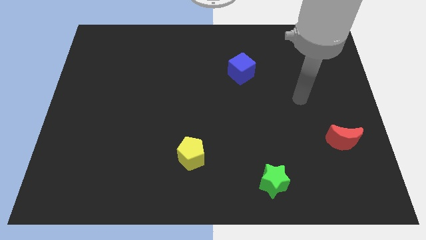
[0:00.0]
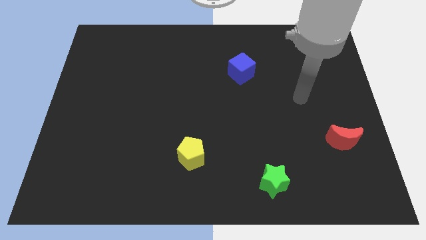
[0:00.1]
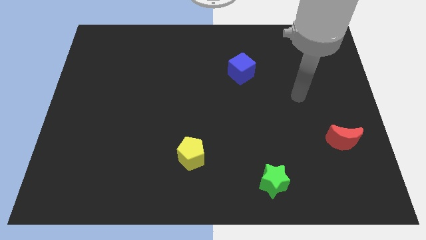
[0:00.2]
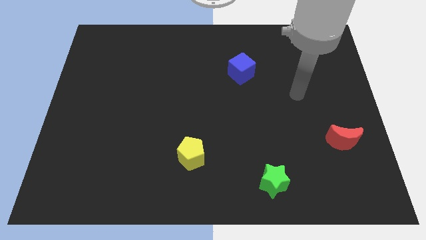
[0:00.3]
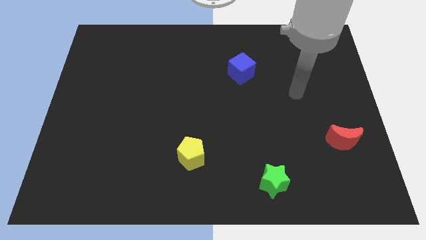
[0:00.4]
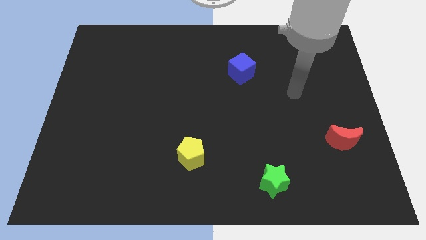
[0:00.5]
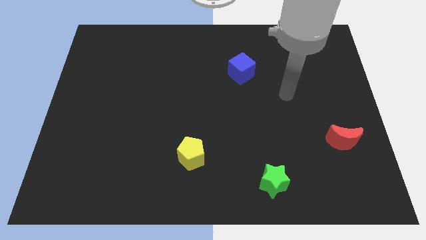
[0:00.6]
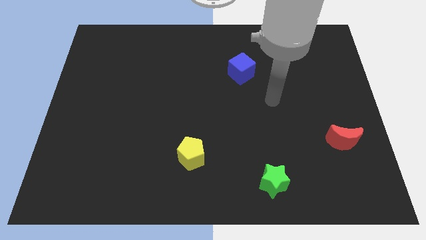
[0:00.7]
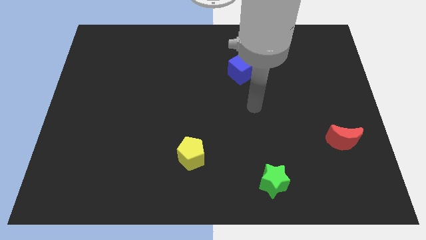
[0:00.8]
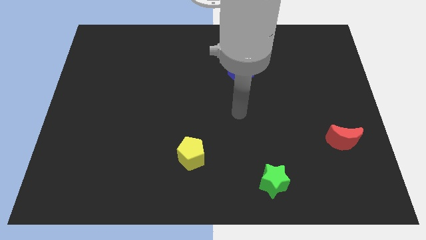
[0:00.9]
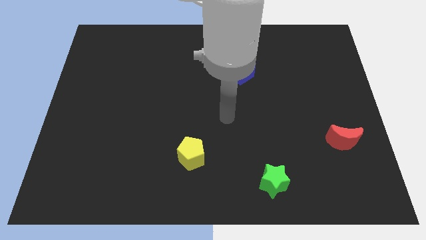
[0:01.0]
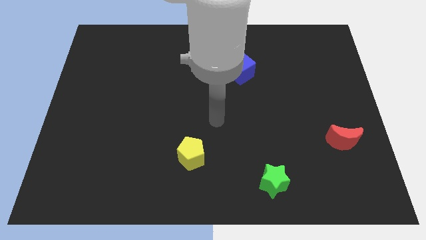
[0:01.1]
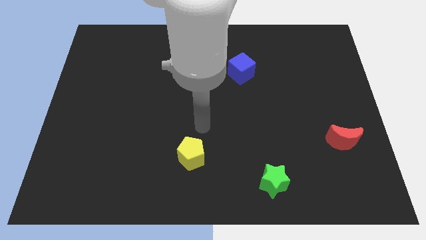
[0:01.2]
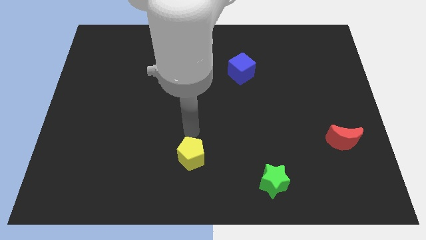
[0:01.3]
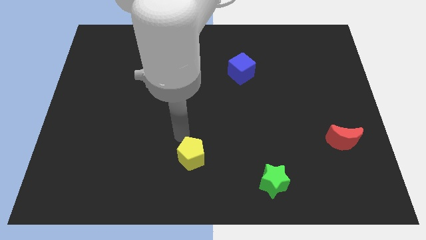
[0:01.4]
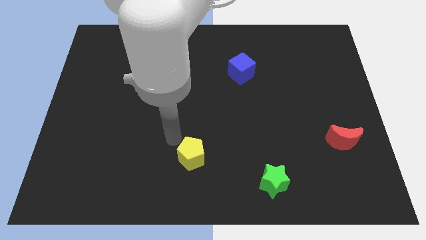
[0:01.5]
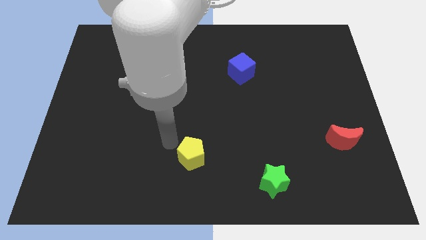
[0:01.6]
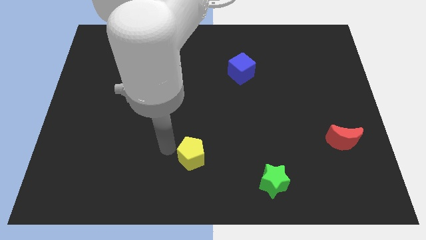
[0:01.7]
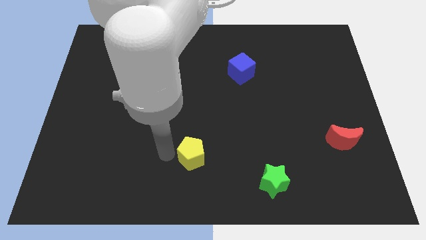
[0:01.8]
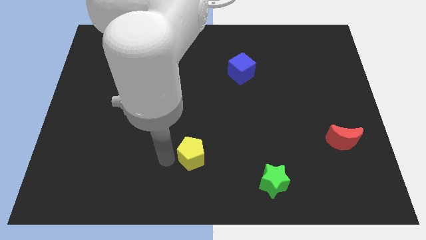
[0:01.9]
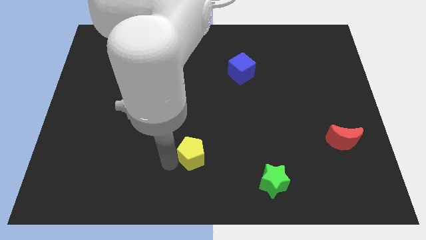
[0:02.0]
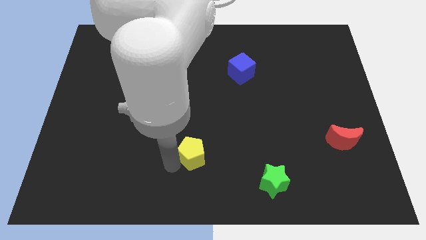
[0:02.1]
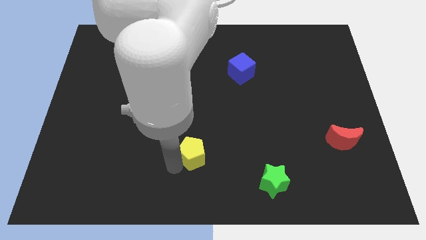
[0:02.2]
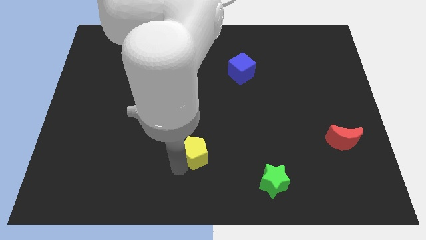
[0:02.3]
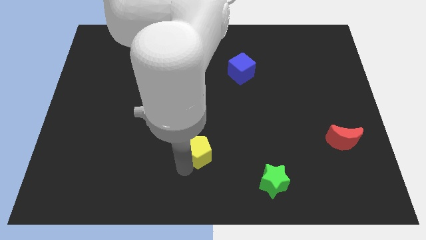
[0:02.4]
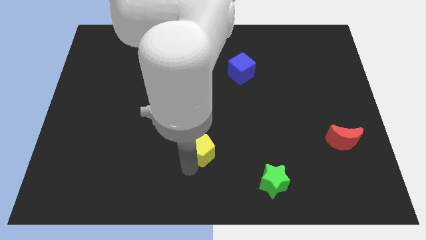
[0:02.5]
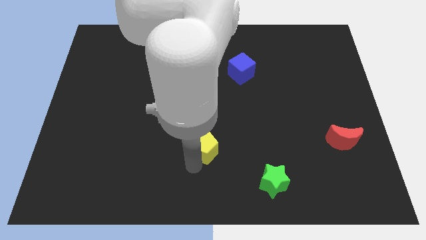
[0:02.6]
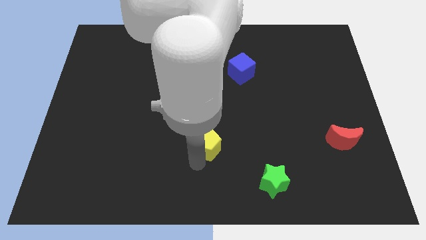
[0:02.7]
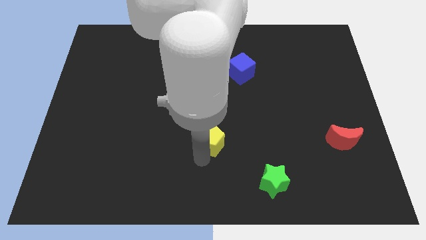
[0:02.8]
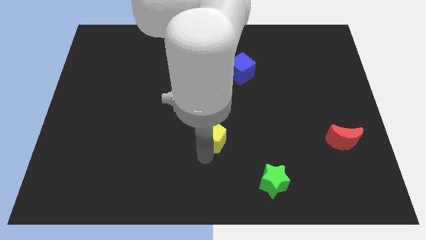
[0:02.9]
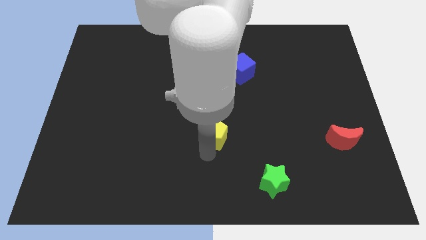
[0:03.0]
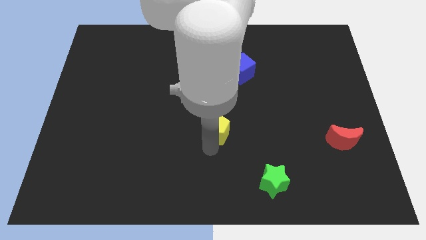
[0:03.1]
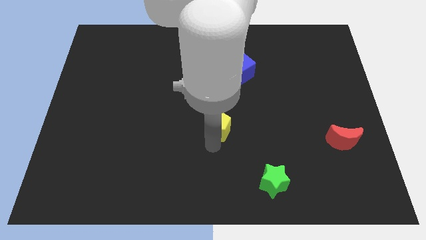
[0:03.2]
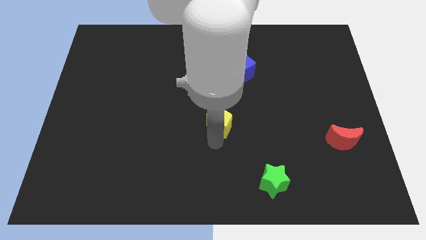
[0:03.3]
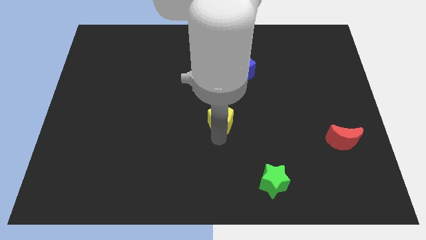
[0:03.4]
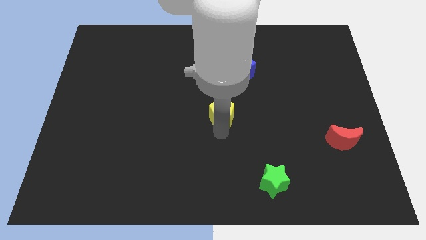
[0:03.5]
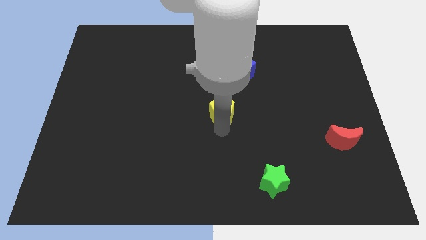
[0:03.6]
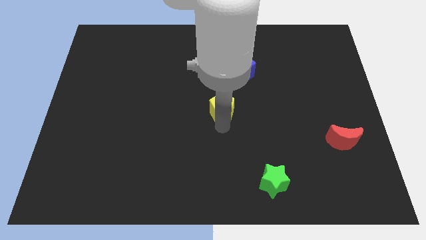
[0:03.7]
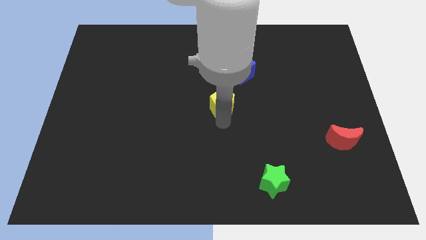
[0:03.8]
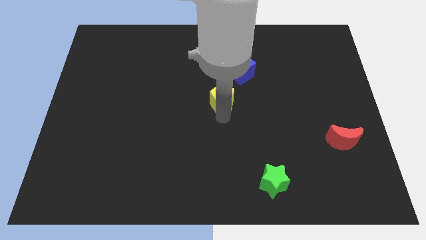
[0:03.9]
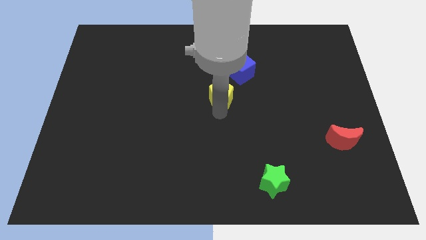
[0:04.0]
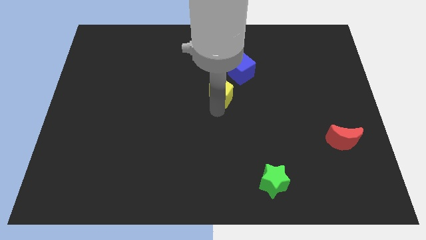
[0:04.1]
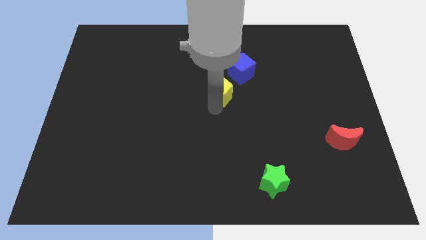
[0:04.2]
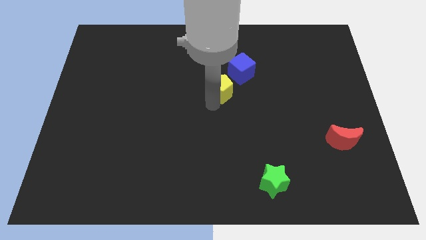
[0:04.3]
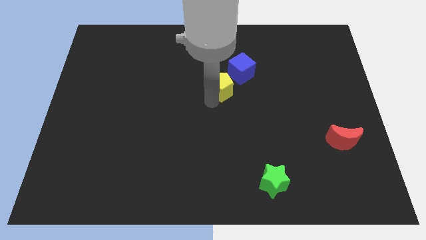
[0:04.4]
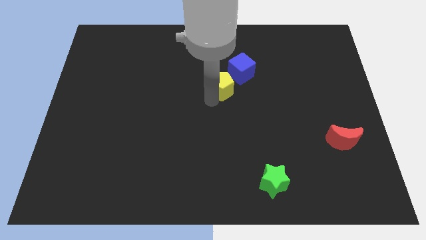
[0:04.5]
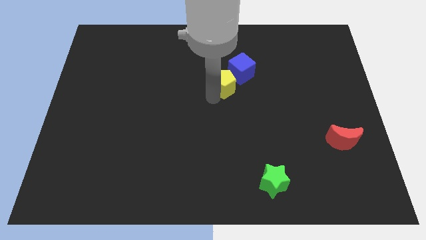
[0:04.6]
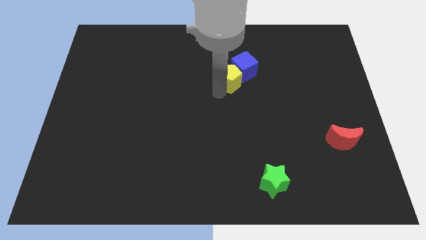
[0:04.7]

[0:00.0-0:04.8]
put the pentagon to the blue cube

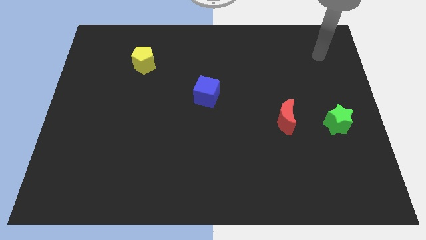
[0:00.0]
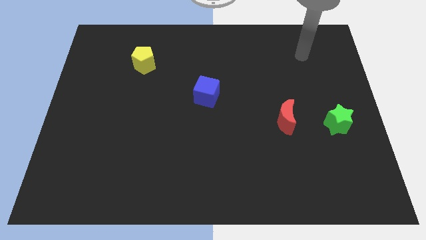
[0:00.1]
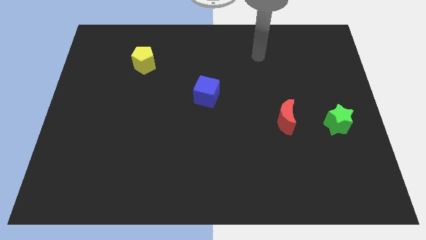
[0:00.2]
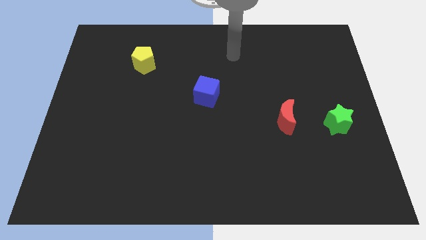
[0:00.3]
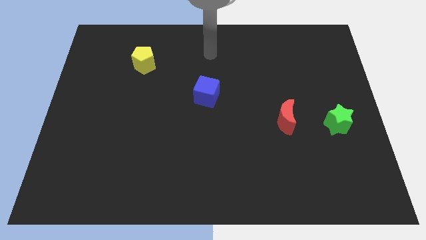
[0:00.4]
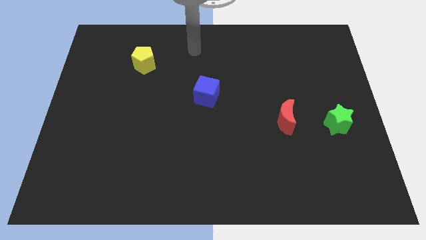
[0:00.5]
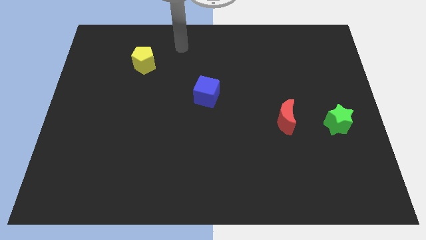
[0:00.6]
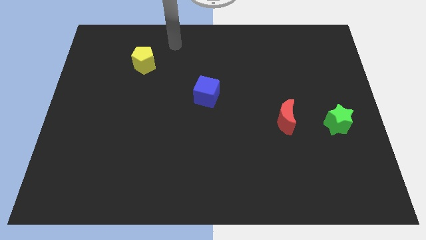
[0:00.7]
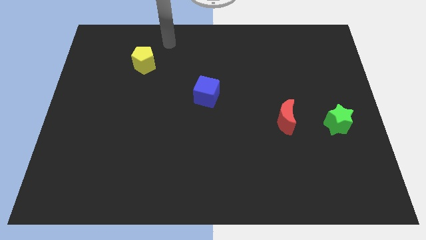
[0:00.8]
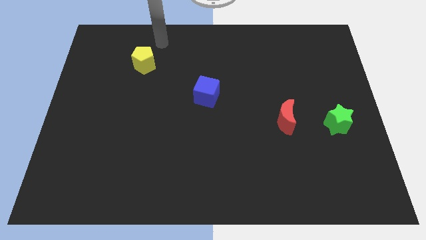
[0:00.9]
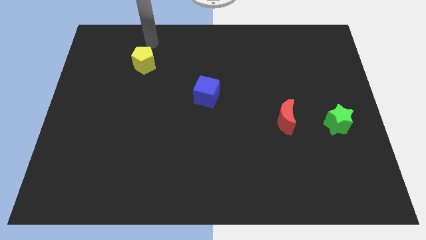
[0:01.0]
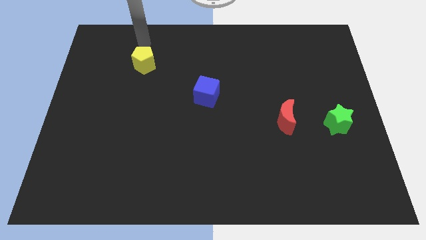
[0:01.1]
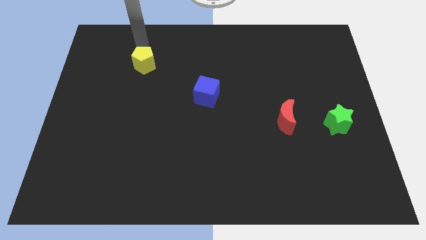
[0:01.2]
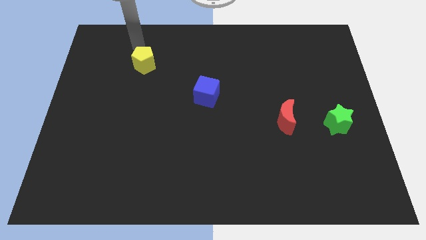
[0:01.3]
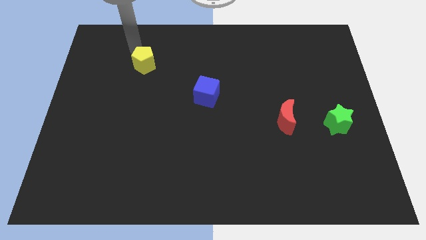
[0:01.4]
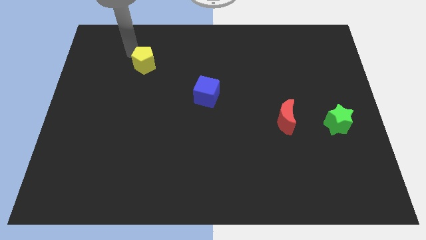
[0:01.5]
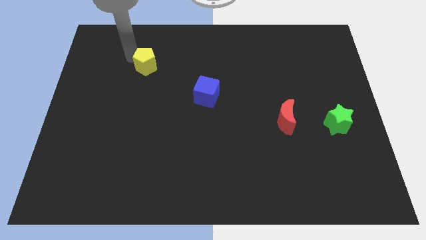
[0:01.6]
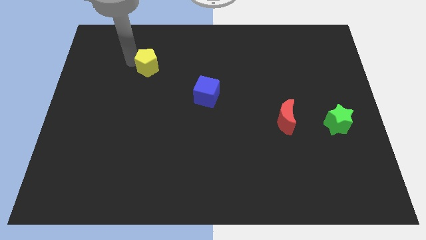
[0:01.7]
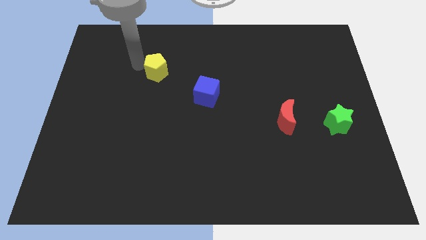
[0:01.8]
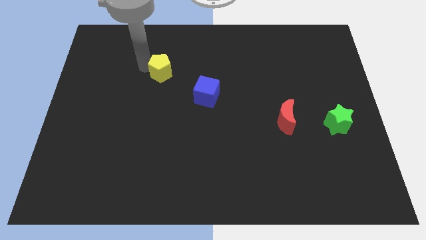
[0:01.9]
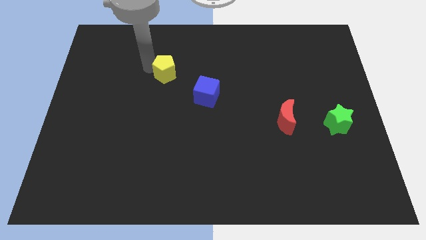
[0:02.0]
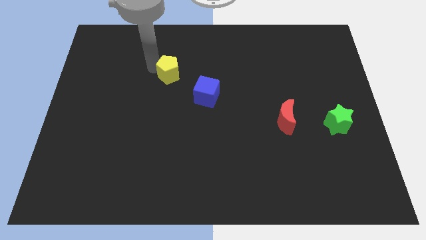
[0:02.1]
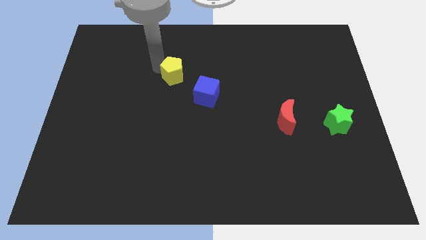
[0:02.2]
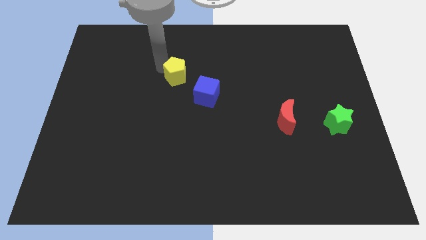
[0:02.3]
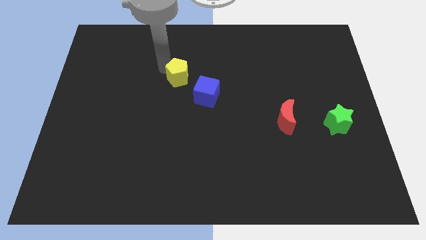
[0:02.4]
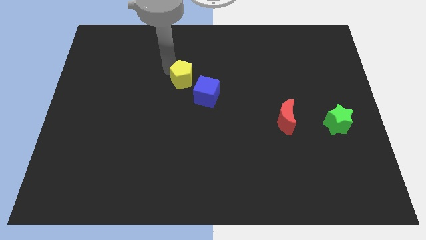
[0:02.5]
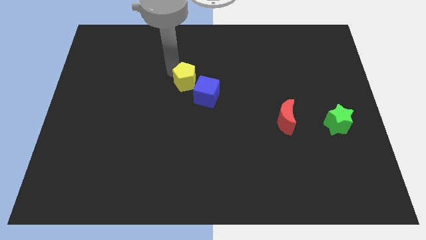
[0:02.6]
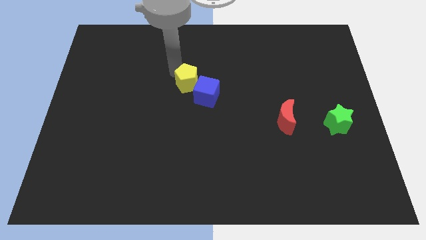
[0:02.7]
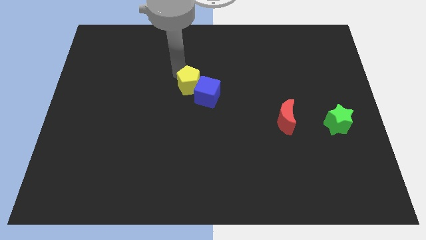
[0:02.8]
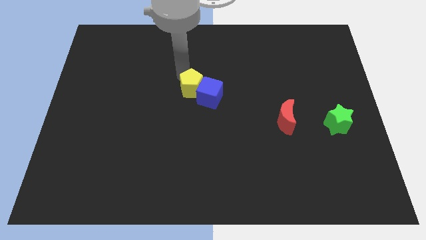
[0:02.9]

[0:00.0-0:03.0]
push the pentagon close to the blue block

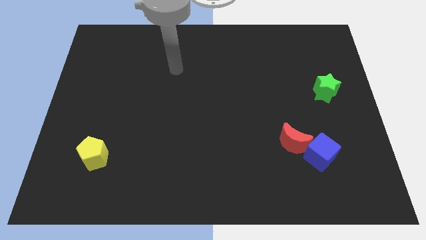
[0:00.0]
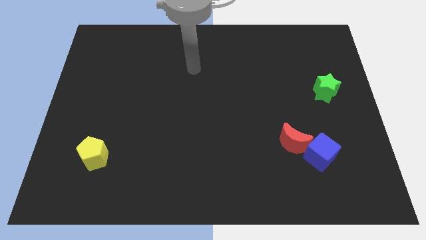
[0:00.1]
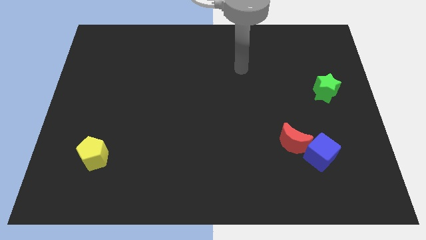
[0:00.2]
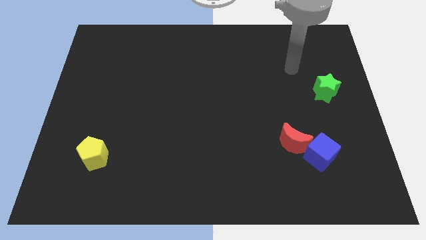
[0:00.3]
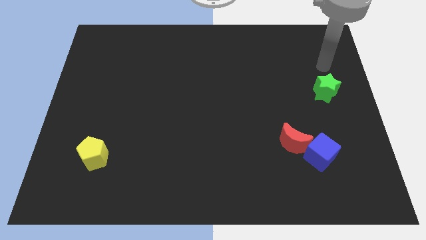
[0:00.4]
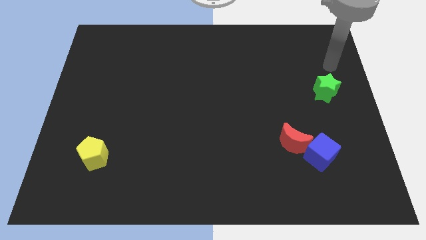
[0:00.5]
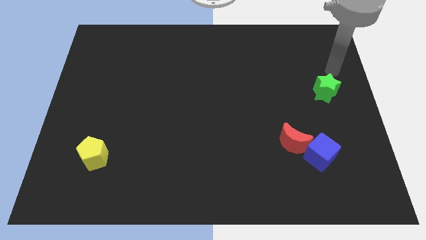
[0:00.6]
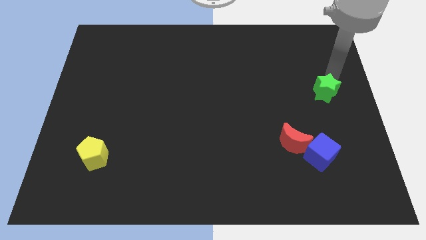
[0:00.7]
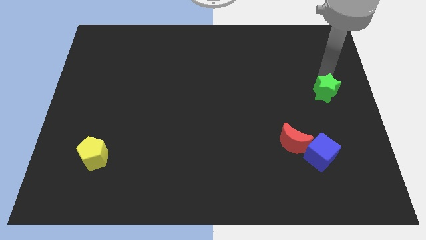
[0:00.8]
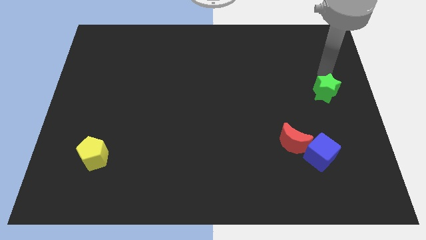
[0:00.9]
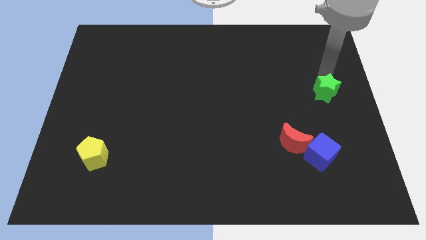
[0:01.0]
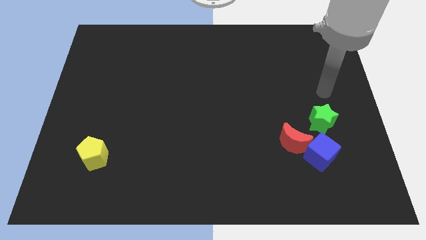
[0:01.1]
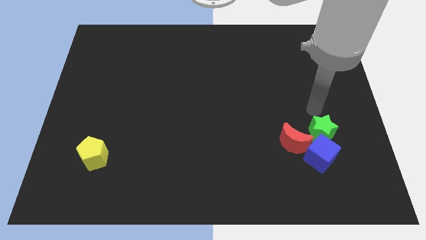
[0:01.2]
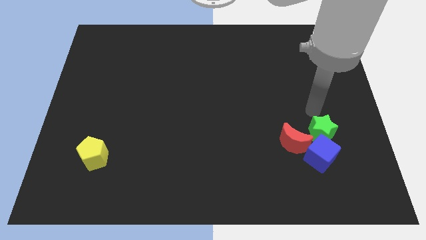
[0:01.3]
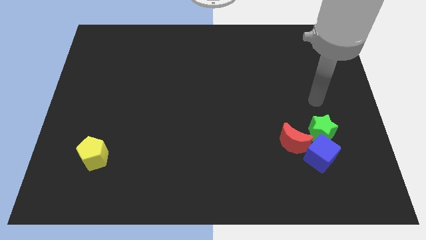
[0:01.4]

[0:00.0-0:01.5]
push the green block towards the blue block
